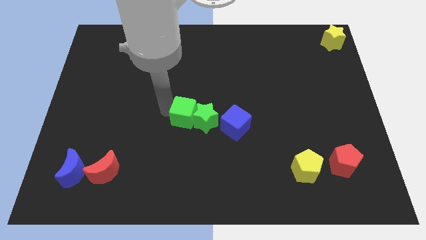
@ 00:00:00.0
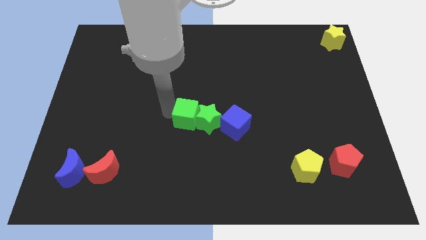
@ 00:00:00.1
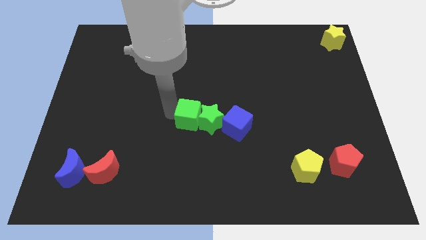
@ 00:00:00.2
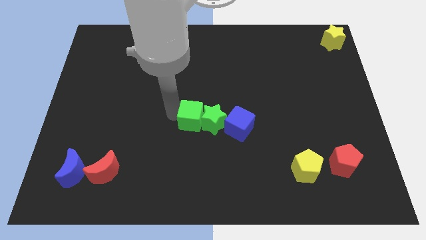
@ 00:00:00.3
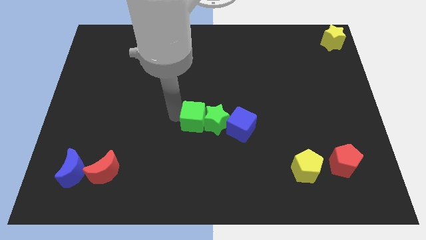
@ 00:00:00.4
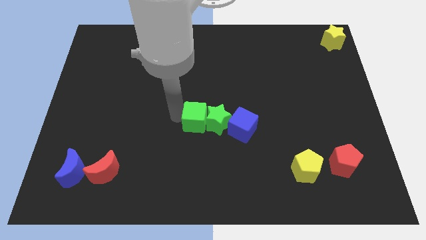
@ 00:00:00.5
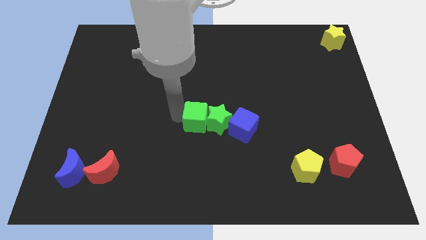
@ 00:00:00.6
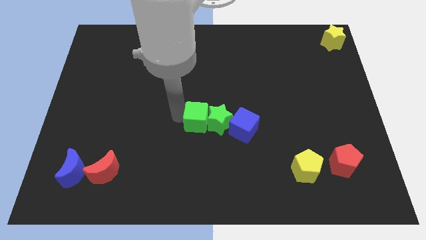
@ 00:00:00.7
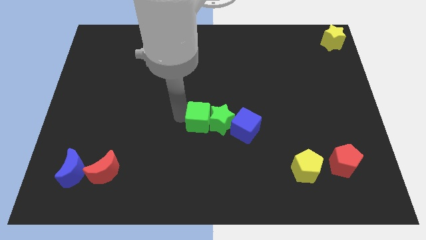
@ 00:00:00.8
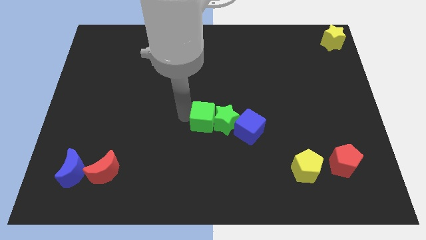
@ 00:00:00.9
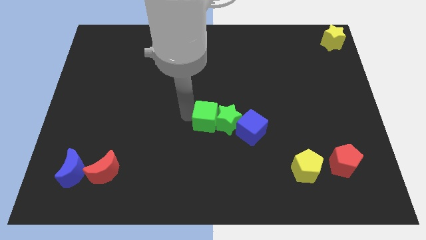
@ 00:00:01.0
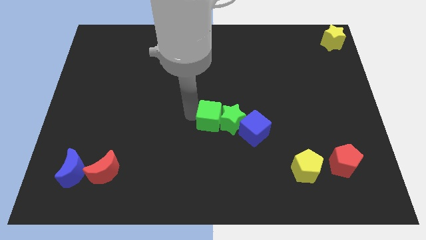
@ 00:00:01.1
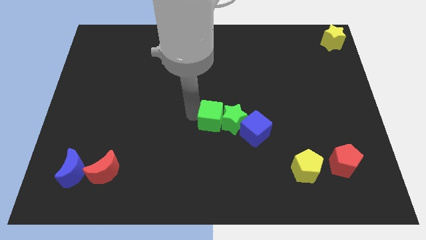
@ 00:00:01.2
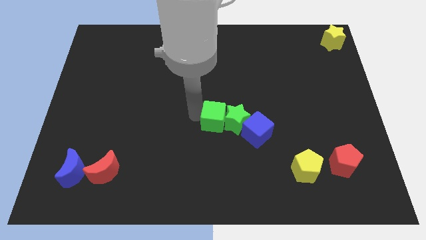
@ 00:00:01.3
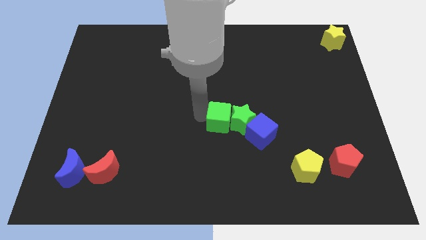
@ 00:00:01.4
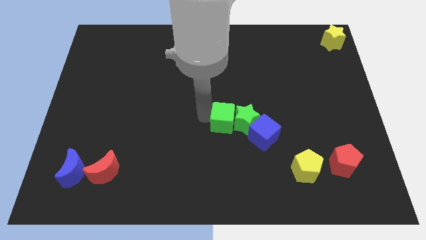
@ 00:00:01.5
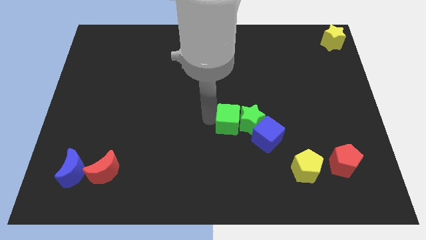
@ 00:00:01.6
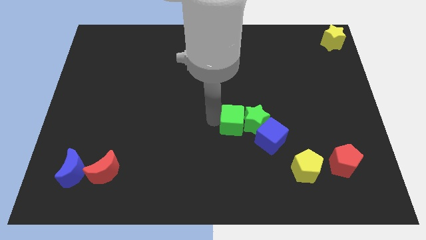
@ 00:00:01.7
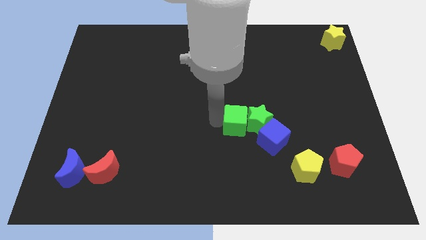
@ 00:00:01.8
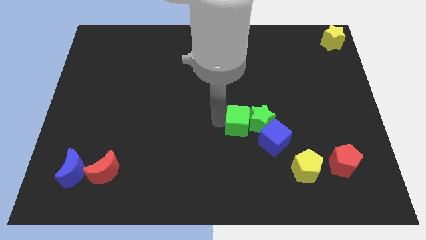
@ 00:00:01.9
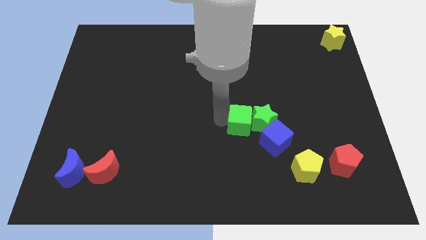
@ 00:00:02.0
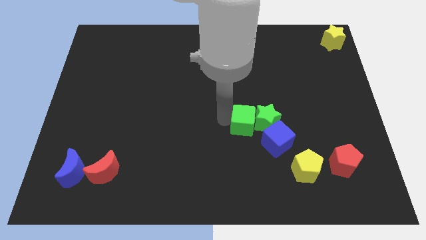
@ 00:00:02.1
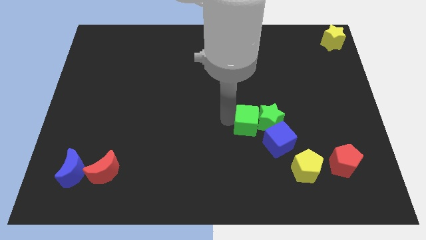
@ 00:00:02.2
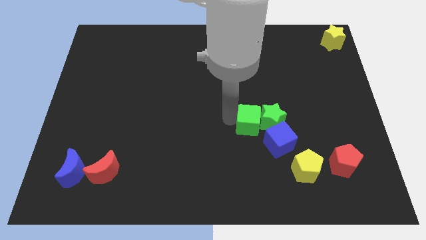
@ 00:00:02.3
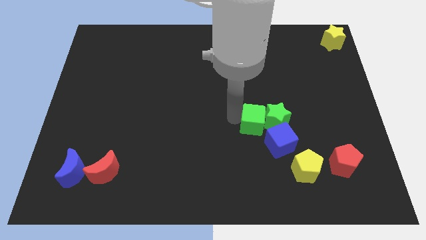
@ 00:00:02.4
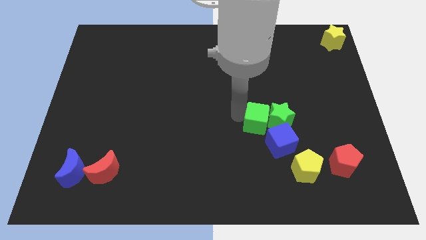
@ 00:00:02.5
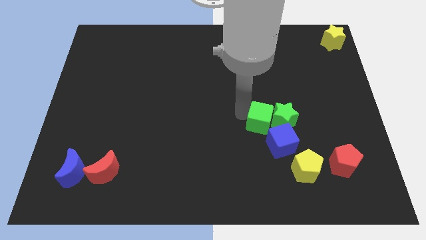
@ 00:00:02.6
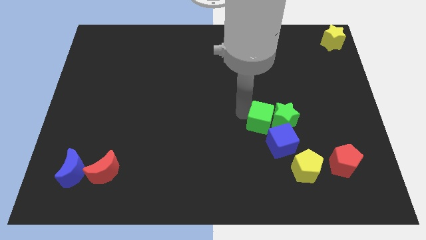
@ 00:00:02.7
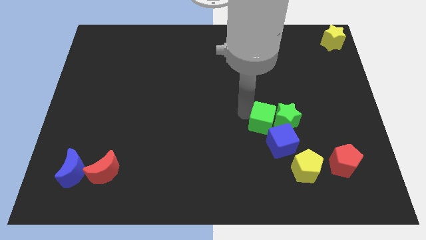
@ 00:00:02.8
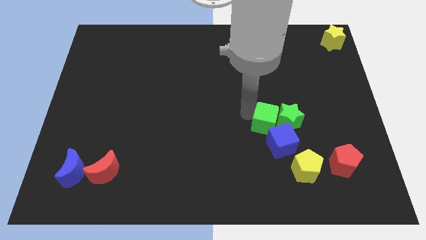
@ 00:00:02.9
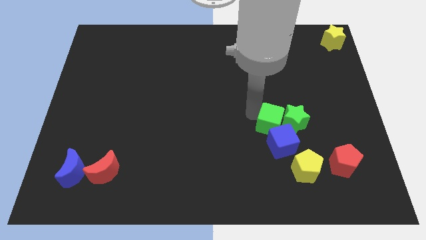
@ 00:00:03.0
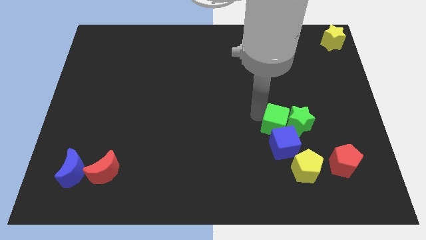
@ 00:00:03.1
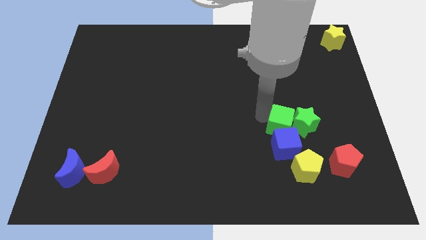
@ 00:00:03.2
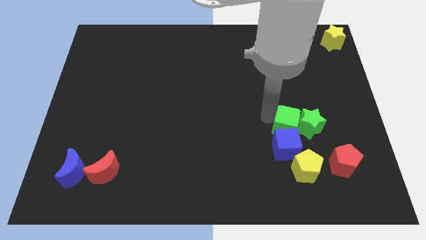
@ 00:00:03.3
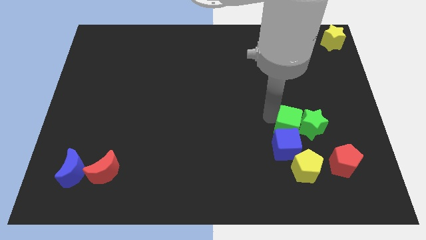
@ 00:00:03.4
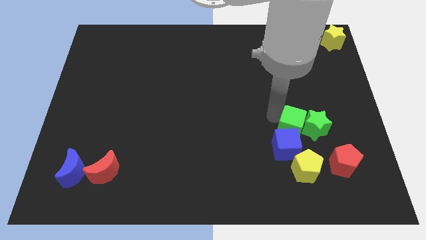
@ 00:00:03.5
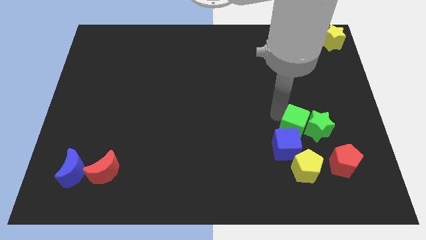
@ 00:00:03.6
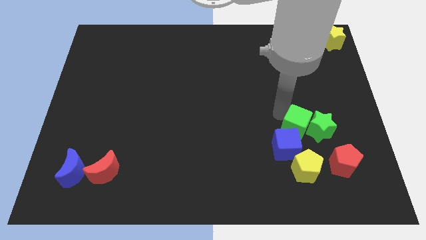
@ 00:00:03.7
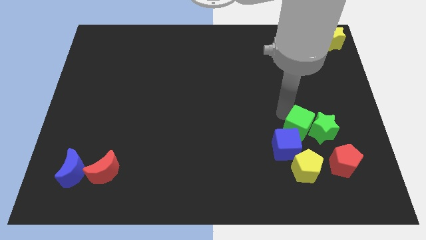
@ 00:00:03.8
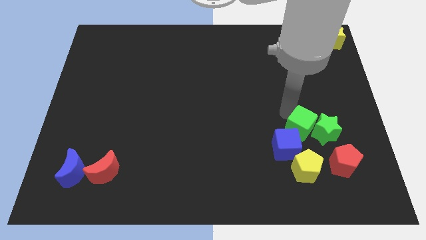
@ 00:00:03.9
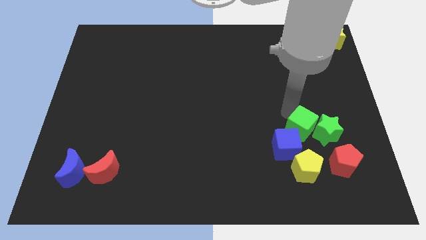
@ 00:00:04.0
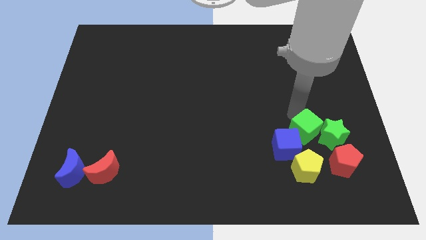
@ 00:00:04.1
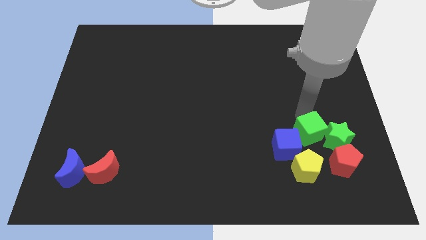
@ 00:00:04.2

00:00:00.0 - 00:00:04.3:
move the green blocks and blue cube above pentagons

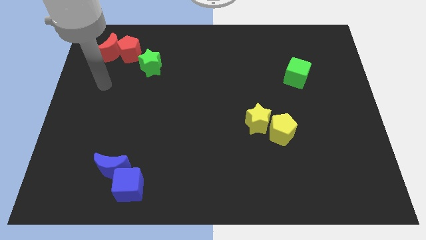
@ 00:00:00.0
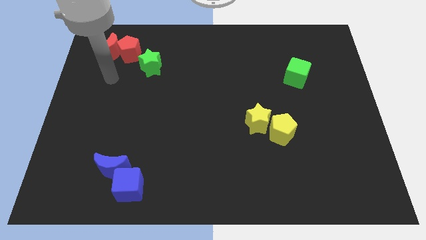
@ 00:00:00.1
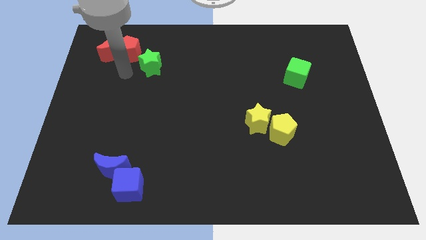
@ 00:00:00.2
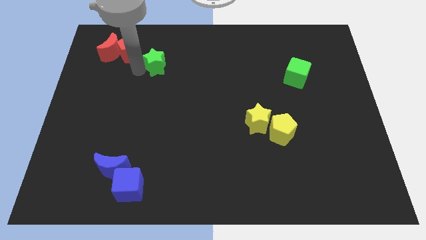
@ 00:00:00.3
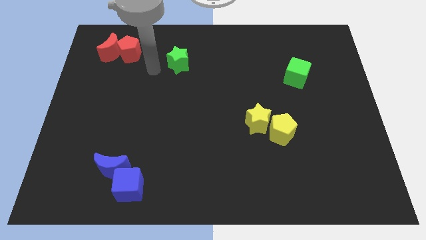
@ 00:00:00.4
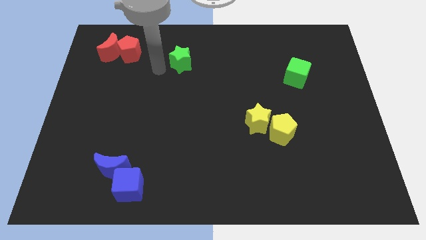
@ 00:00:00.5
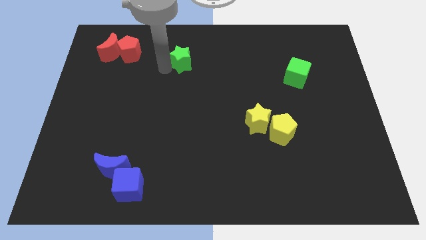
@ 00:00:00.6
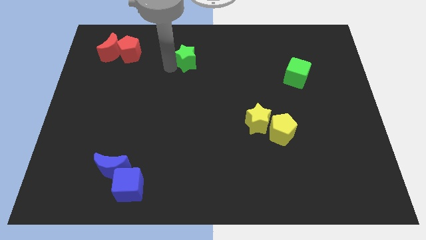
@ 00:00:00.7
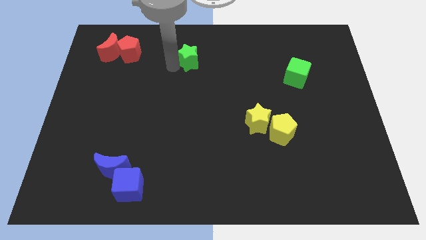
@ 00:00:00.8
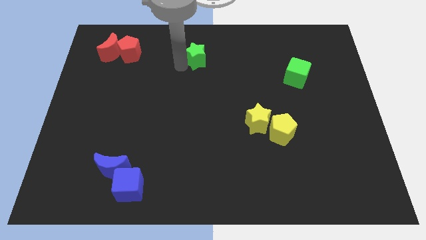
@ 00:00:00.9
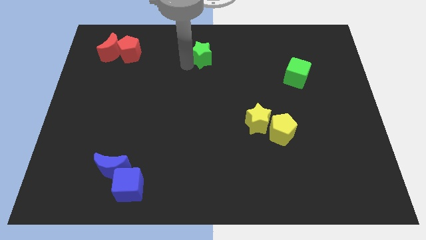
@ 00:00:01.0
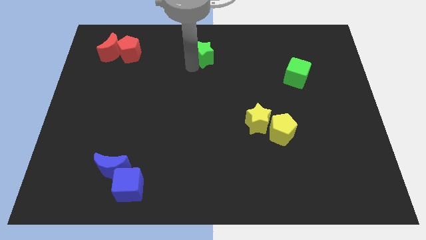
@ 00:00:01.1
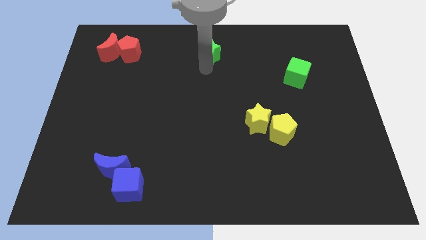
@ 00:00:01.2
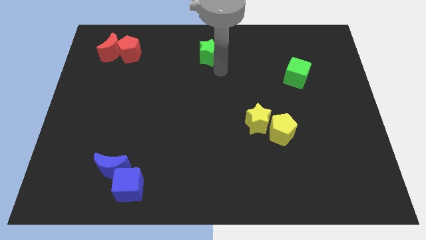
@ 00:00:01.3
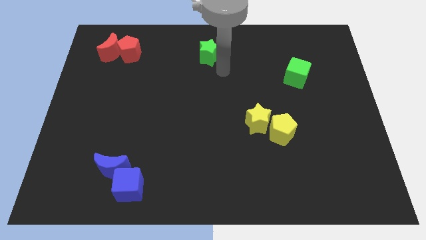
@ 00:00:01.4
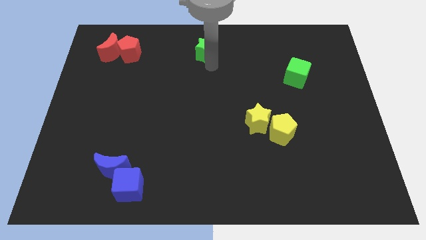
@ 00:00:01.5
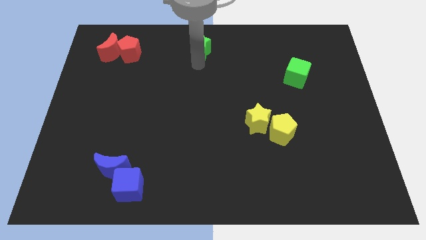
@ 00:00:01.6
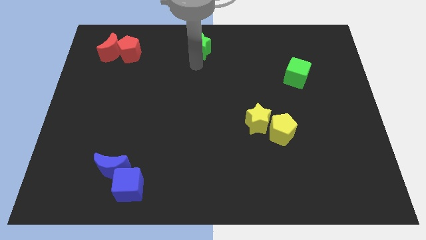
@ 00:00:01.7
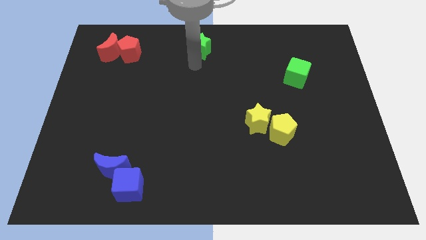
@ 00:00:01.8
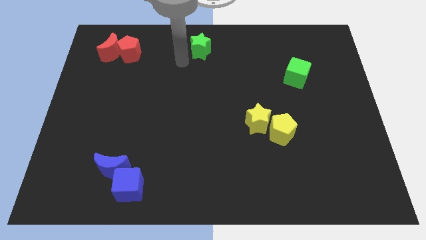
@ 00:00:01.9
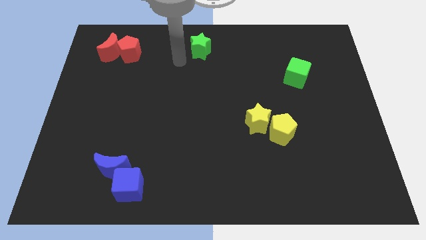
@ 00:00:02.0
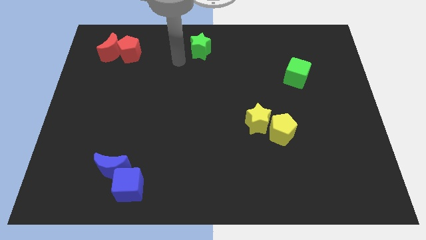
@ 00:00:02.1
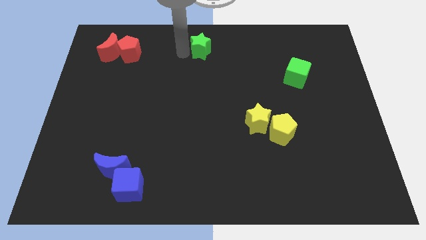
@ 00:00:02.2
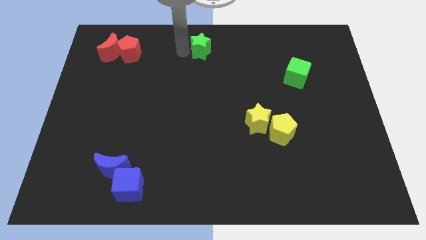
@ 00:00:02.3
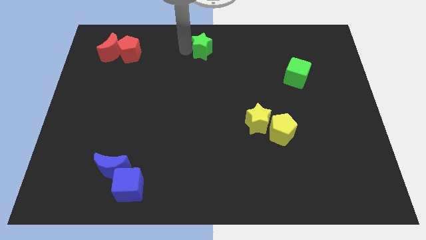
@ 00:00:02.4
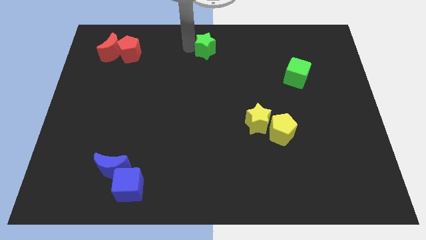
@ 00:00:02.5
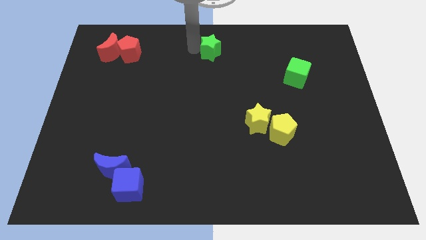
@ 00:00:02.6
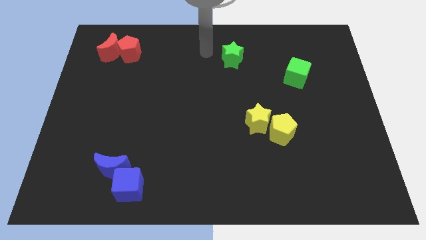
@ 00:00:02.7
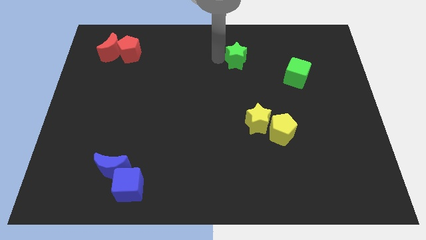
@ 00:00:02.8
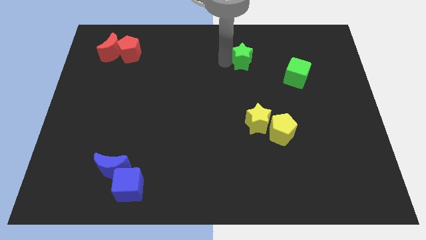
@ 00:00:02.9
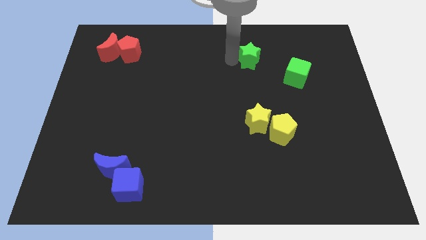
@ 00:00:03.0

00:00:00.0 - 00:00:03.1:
move green star diagonally above the green cube

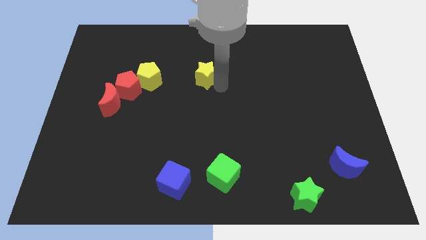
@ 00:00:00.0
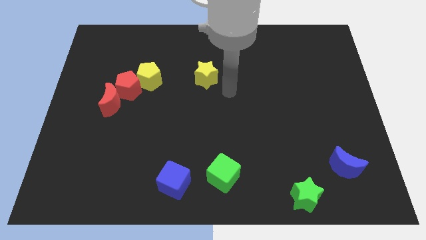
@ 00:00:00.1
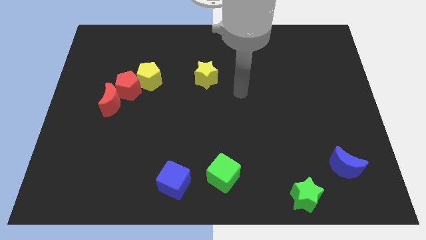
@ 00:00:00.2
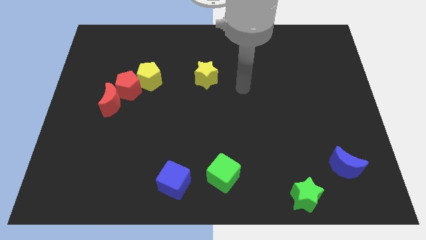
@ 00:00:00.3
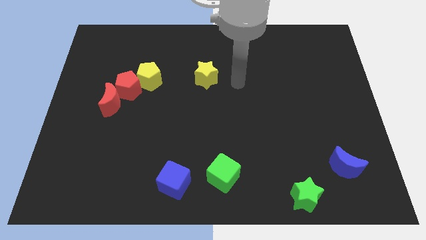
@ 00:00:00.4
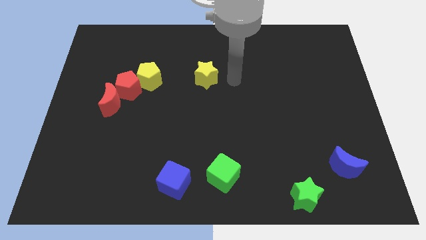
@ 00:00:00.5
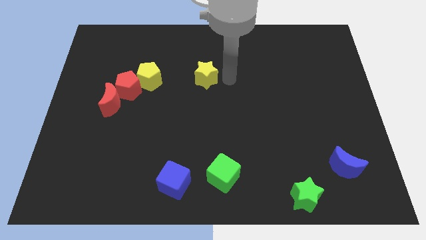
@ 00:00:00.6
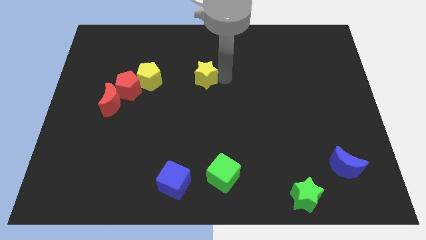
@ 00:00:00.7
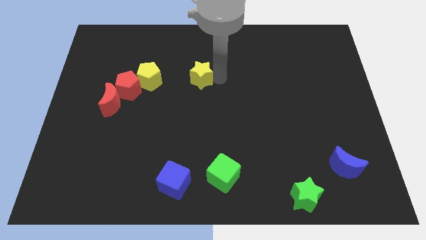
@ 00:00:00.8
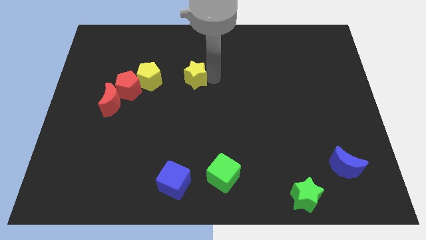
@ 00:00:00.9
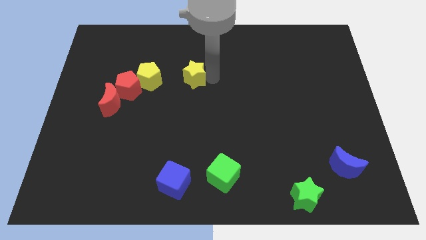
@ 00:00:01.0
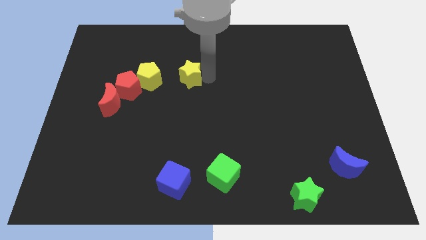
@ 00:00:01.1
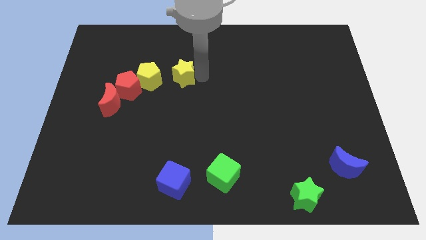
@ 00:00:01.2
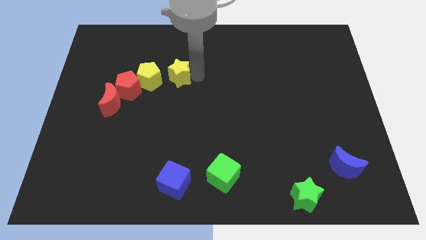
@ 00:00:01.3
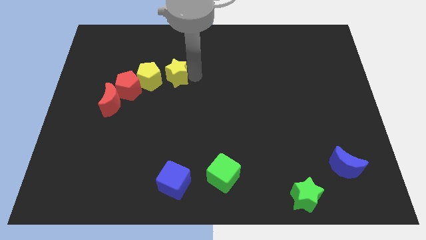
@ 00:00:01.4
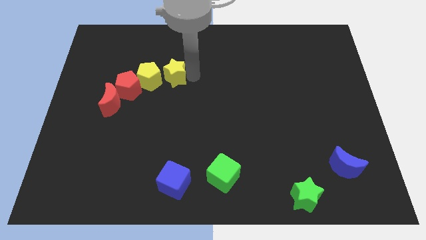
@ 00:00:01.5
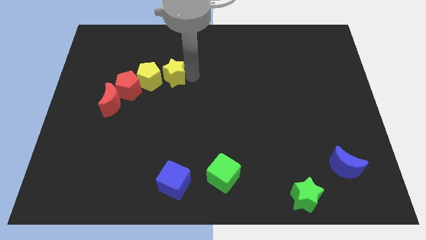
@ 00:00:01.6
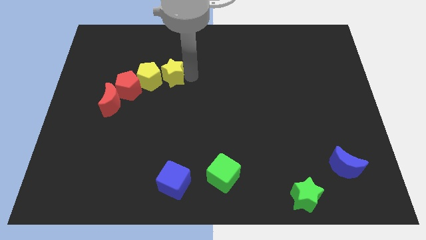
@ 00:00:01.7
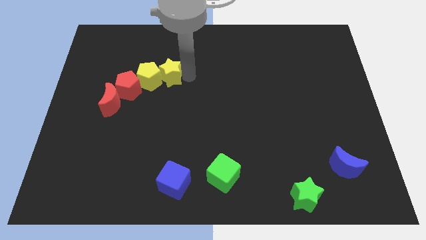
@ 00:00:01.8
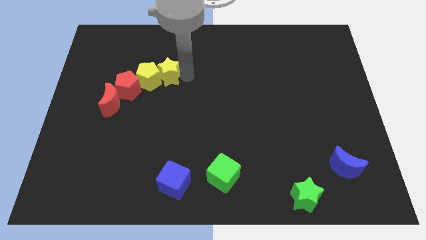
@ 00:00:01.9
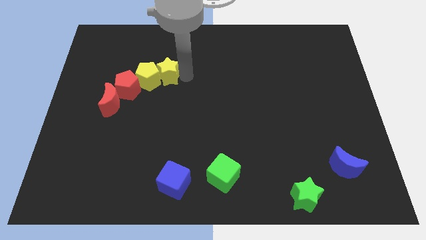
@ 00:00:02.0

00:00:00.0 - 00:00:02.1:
place the yellow star to the right of the yellow pentagon
